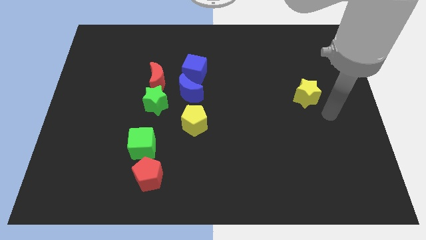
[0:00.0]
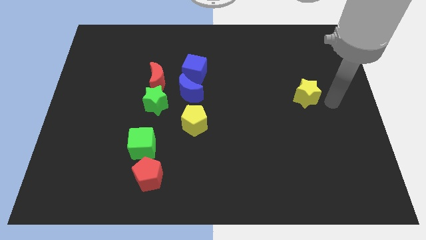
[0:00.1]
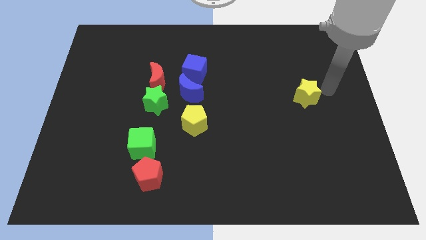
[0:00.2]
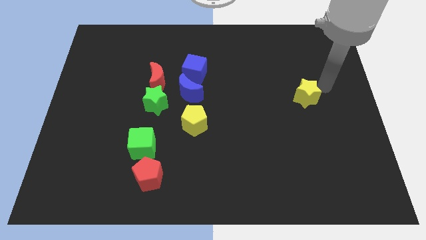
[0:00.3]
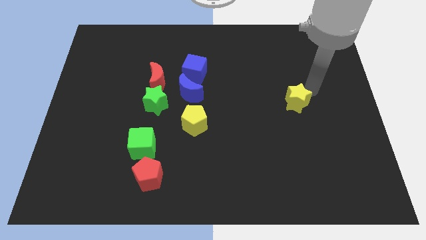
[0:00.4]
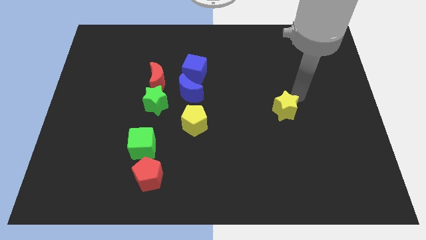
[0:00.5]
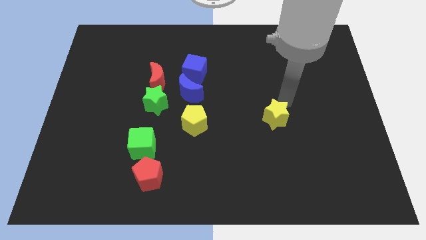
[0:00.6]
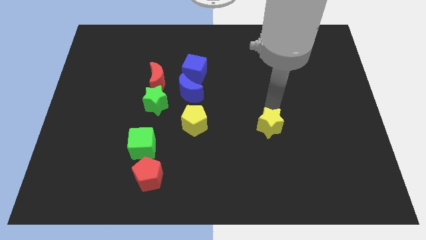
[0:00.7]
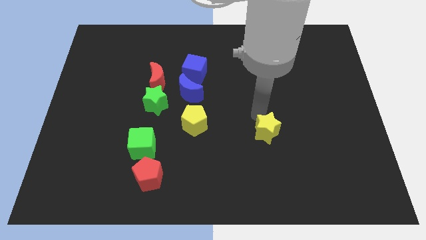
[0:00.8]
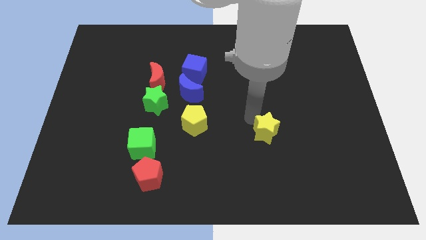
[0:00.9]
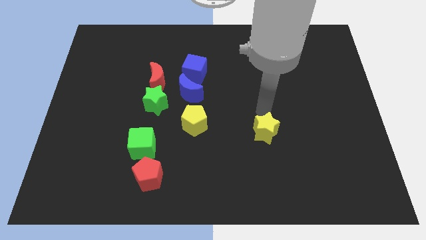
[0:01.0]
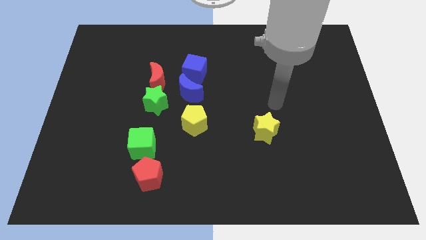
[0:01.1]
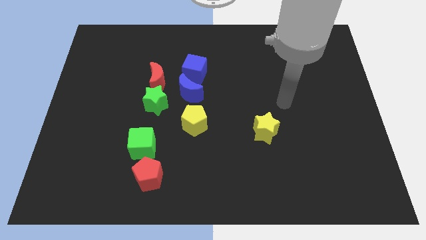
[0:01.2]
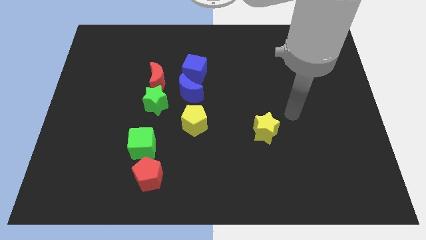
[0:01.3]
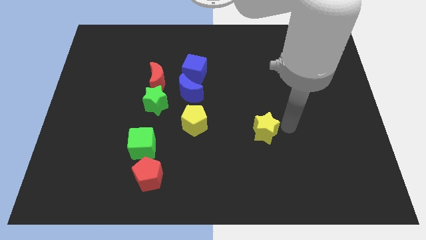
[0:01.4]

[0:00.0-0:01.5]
place the yellow star to the right of the yellow pentagon

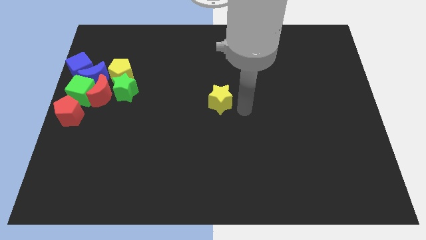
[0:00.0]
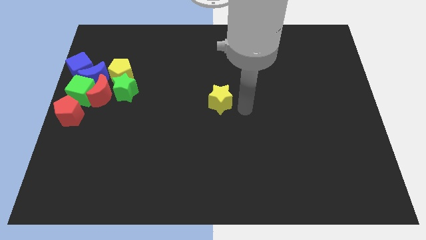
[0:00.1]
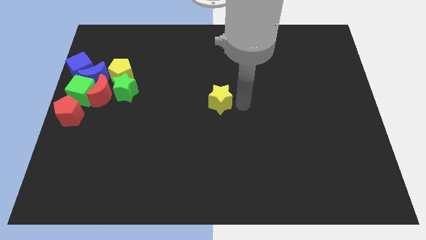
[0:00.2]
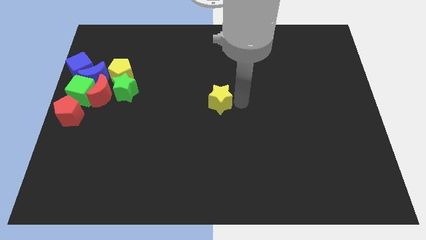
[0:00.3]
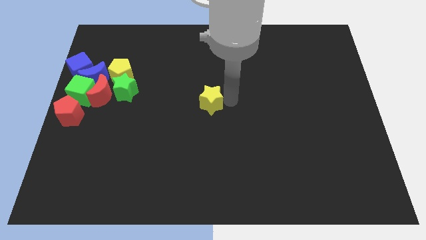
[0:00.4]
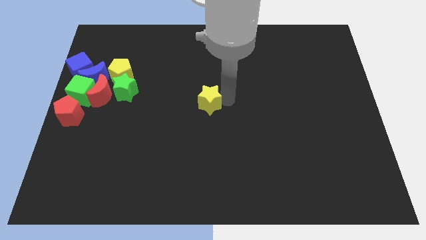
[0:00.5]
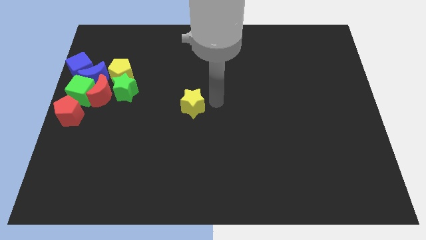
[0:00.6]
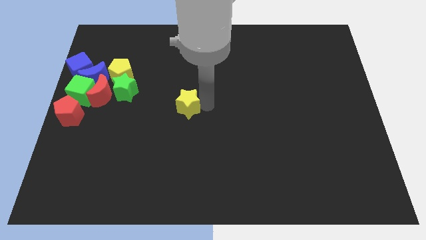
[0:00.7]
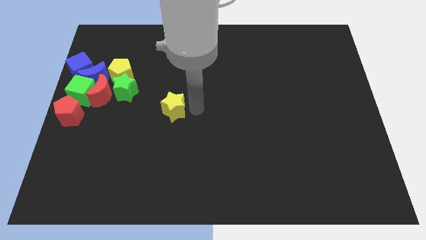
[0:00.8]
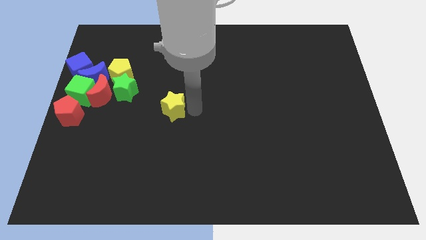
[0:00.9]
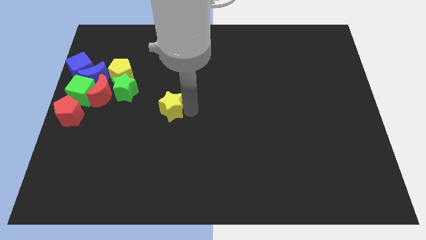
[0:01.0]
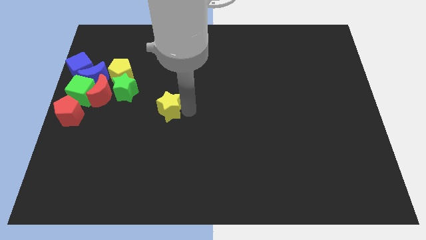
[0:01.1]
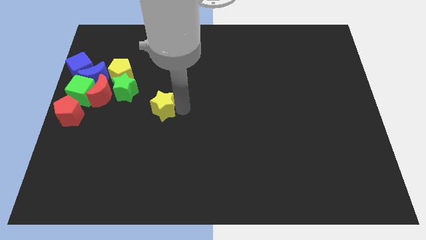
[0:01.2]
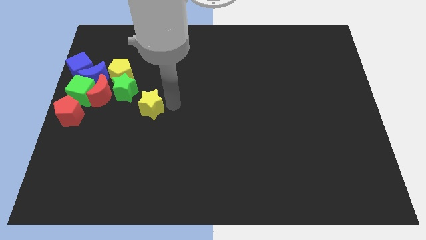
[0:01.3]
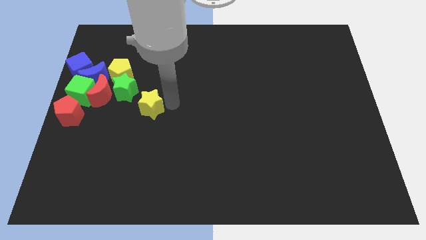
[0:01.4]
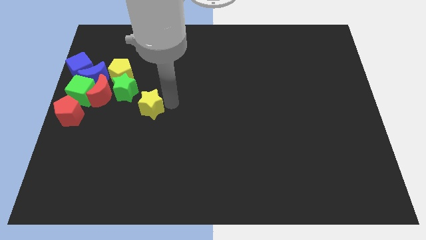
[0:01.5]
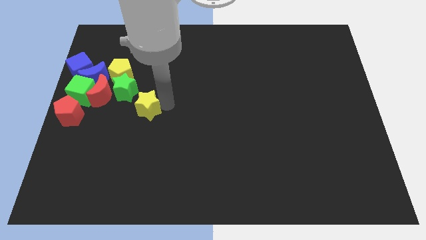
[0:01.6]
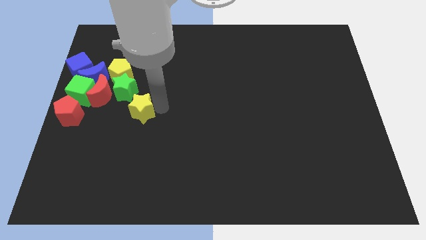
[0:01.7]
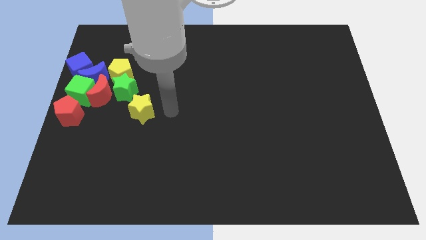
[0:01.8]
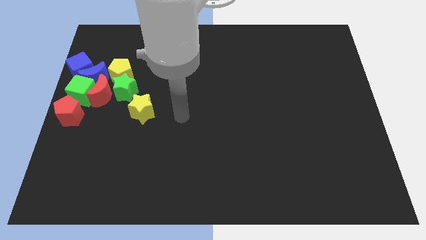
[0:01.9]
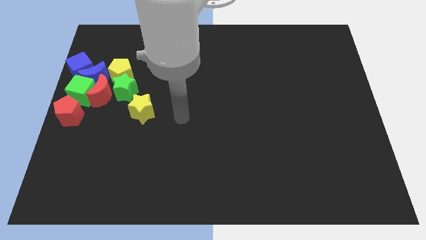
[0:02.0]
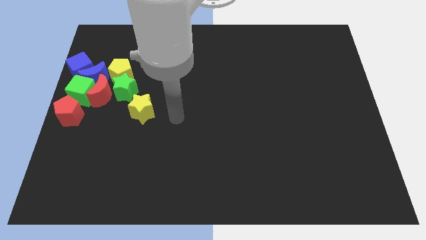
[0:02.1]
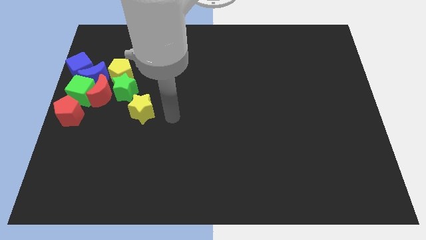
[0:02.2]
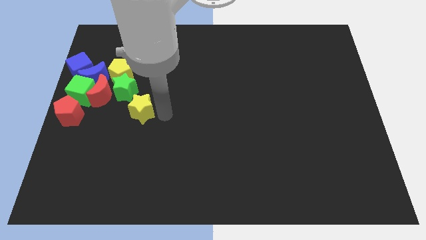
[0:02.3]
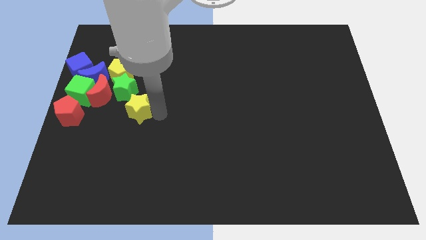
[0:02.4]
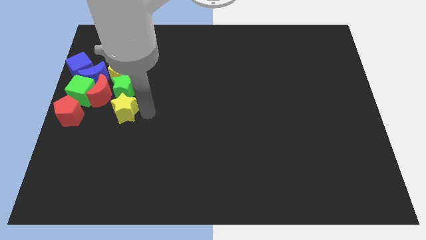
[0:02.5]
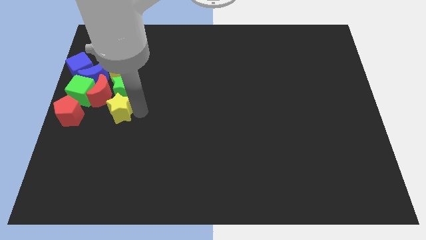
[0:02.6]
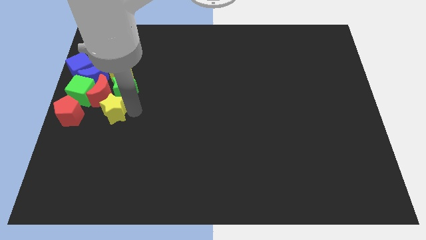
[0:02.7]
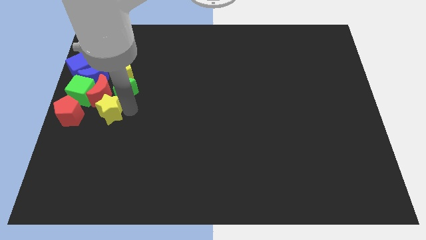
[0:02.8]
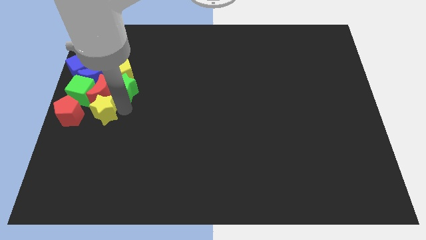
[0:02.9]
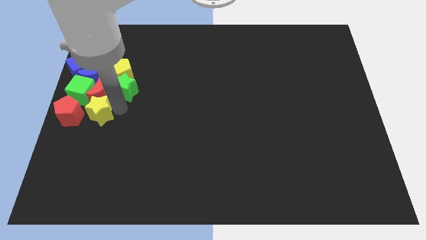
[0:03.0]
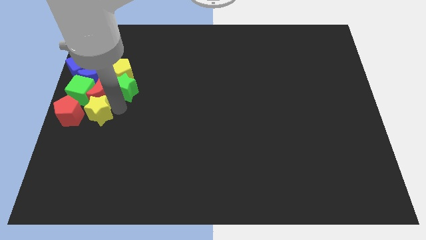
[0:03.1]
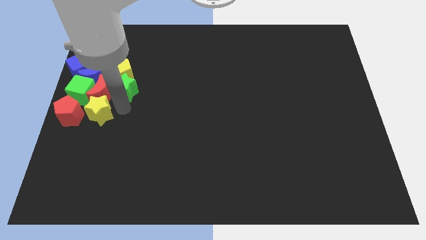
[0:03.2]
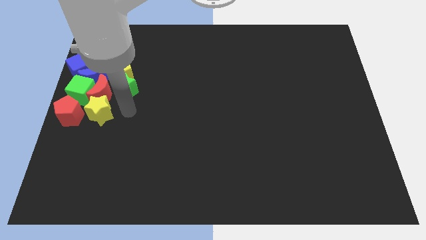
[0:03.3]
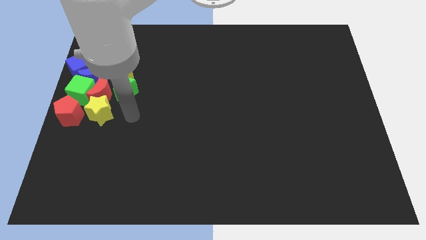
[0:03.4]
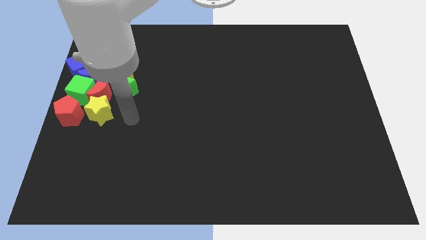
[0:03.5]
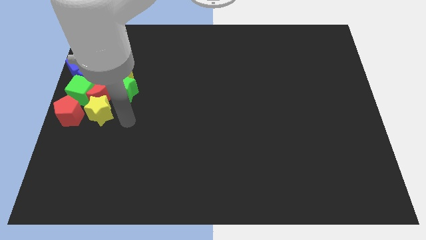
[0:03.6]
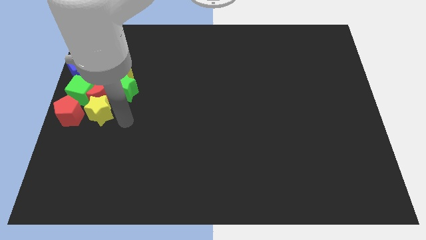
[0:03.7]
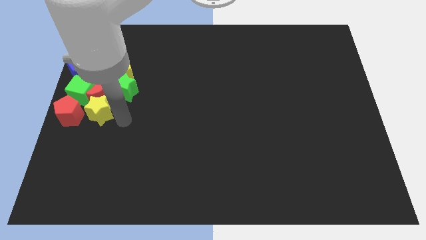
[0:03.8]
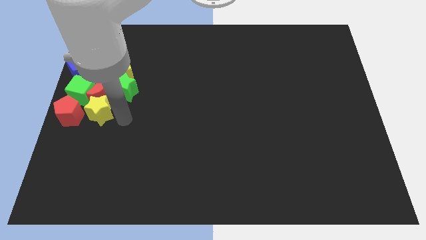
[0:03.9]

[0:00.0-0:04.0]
place the yellow star to the right side of the red pentagon

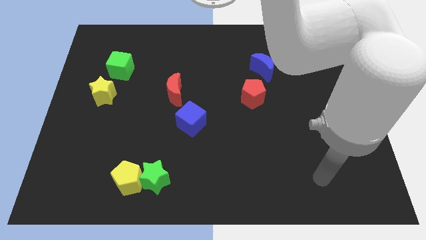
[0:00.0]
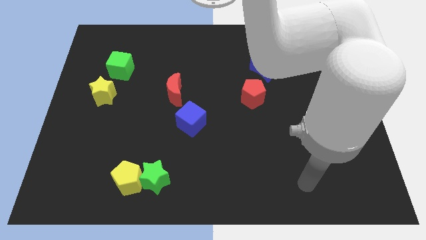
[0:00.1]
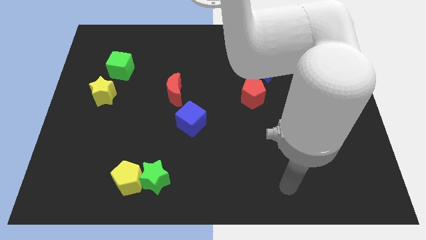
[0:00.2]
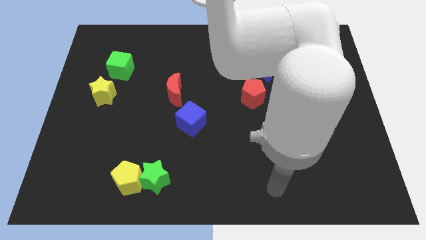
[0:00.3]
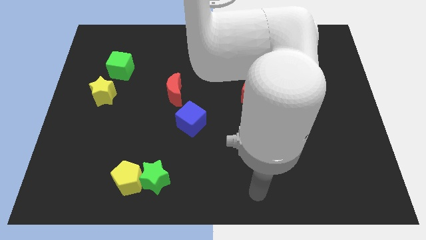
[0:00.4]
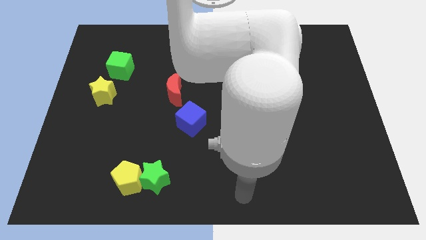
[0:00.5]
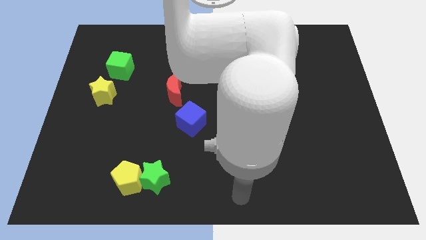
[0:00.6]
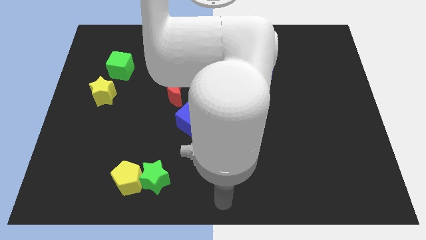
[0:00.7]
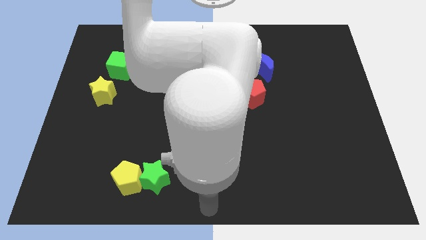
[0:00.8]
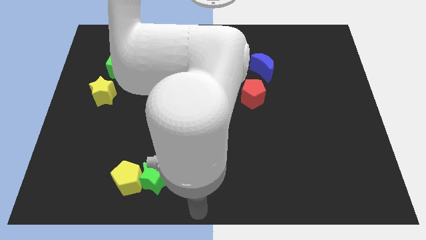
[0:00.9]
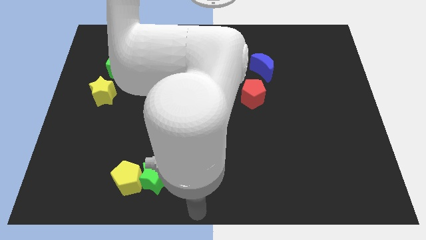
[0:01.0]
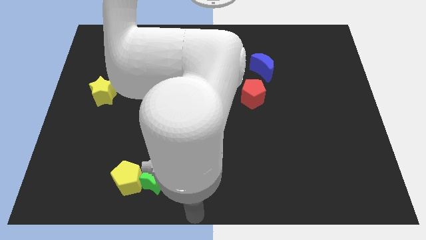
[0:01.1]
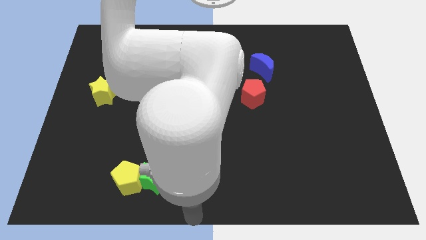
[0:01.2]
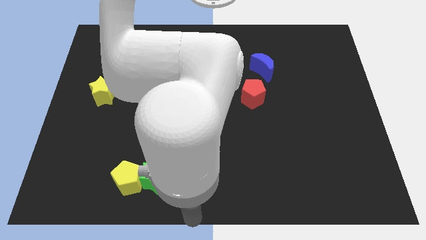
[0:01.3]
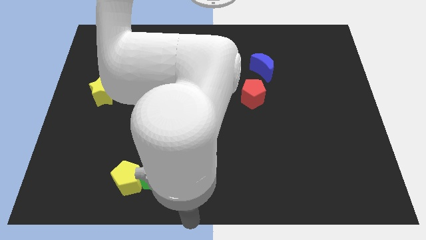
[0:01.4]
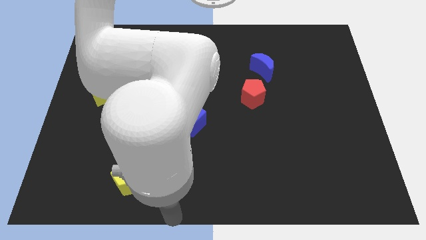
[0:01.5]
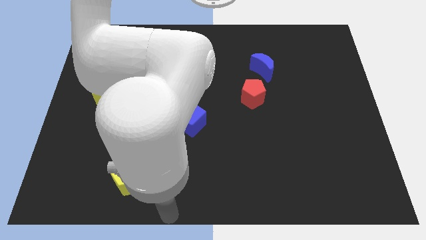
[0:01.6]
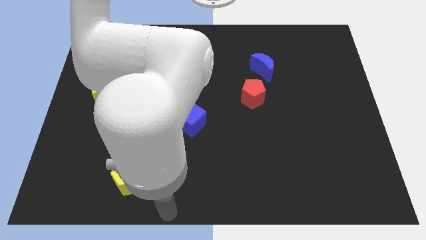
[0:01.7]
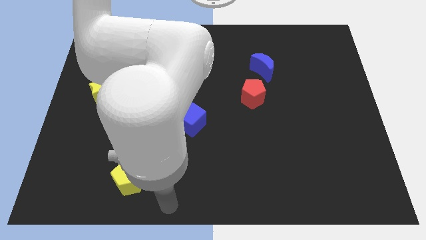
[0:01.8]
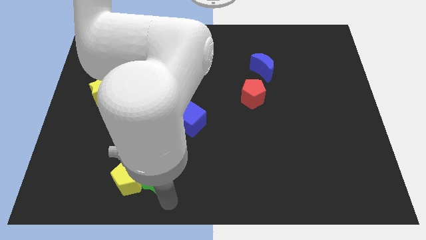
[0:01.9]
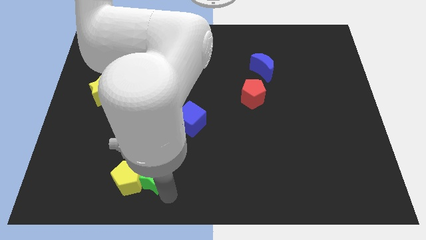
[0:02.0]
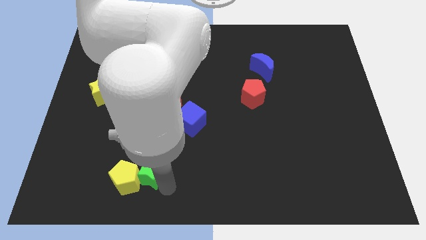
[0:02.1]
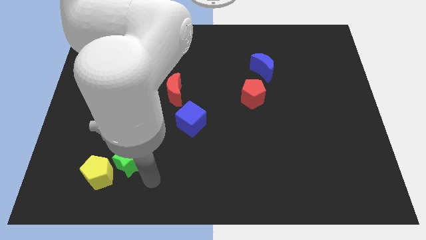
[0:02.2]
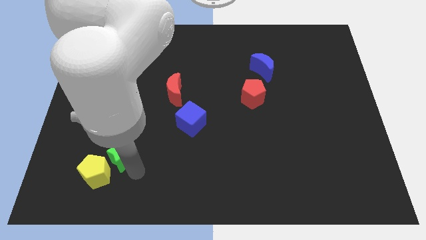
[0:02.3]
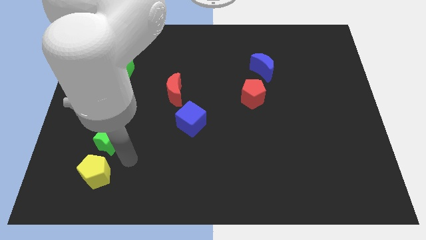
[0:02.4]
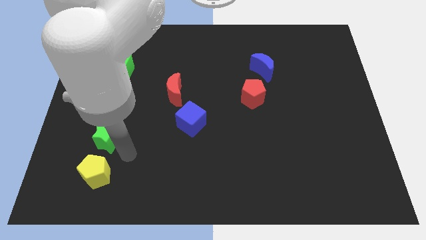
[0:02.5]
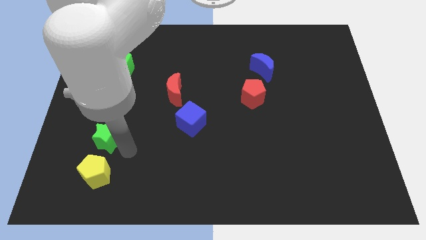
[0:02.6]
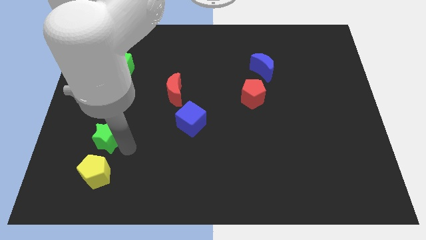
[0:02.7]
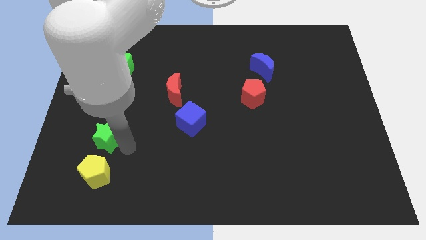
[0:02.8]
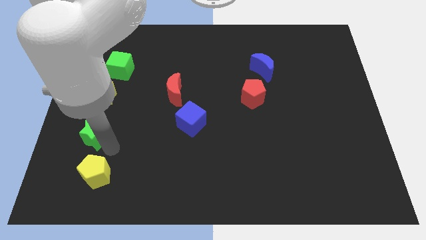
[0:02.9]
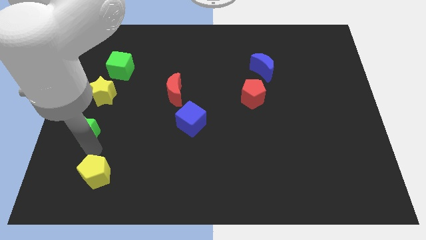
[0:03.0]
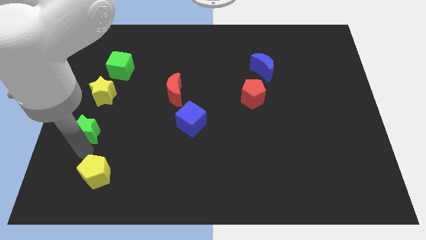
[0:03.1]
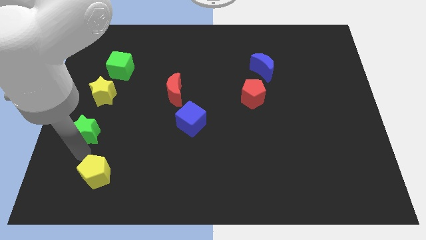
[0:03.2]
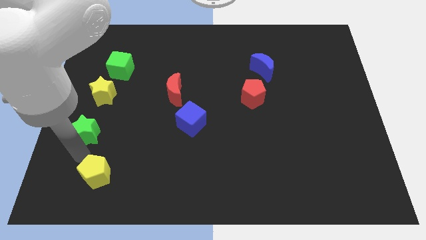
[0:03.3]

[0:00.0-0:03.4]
push the green star to the bottom of the yellow star

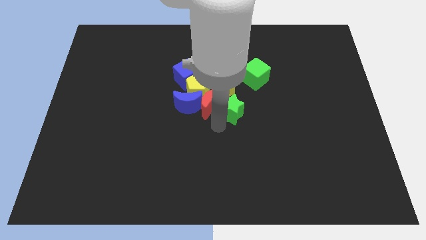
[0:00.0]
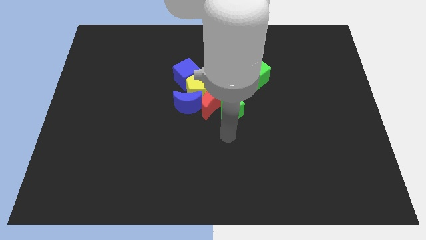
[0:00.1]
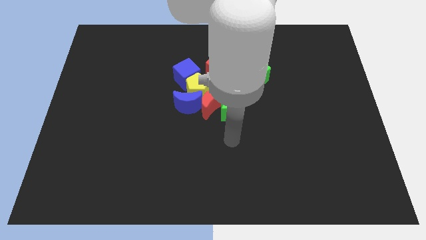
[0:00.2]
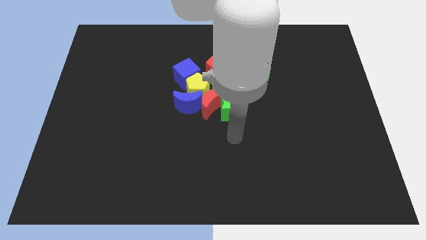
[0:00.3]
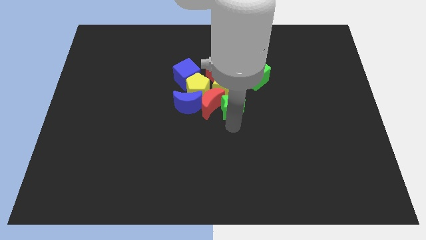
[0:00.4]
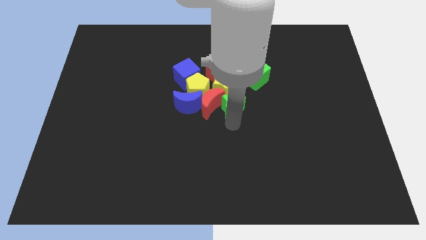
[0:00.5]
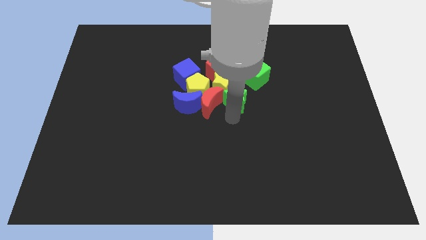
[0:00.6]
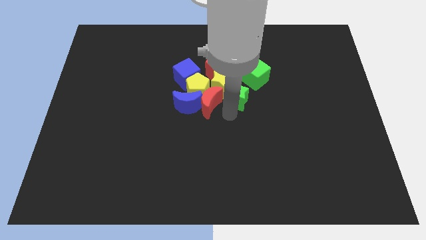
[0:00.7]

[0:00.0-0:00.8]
move the green star close to the yellow star
